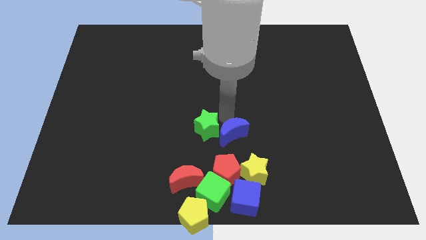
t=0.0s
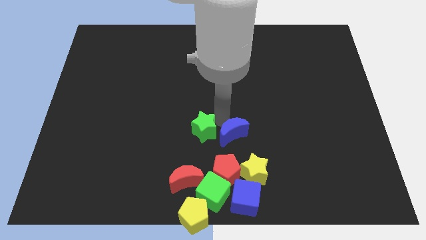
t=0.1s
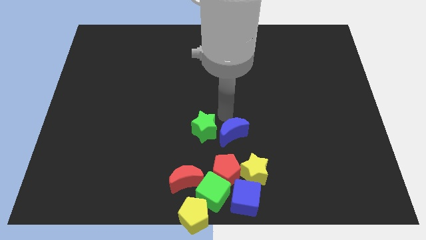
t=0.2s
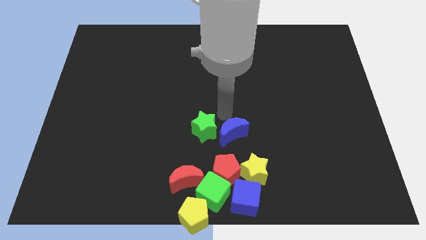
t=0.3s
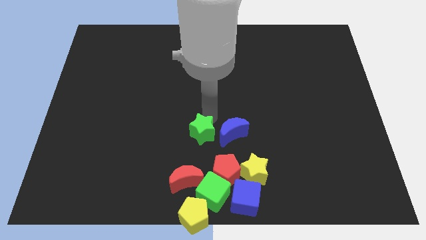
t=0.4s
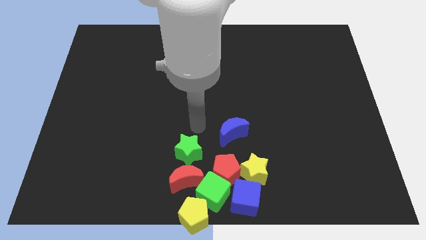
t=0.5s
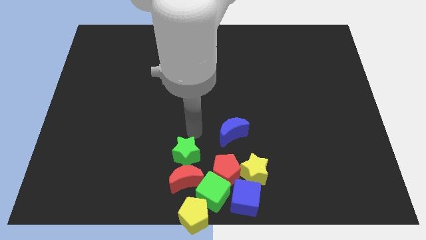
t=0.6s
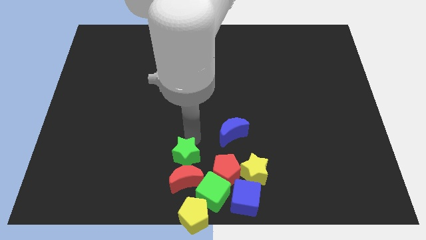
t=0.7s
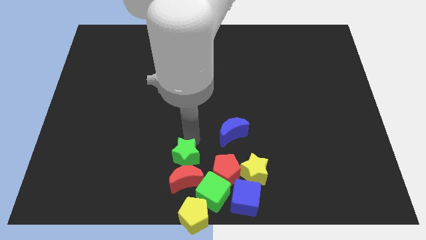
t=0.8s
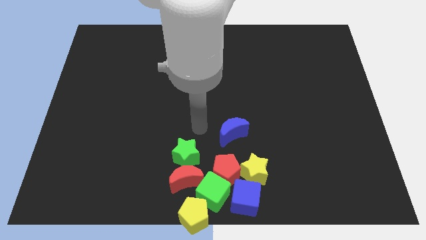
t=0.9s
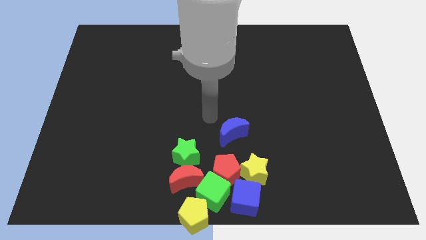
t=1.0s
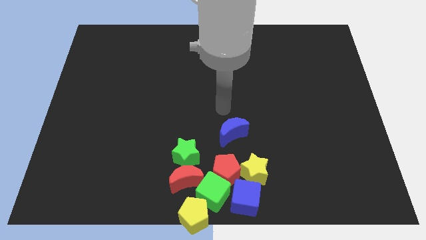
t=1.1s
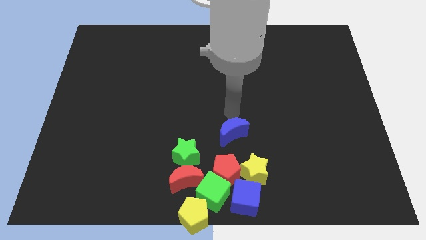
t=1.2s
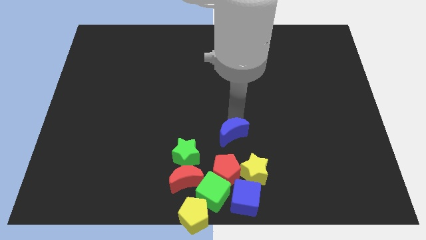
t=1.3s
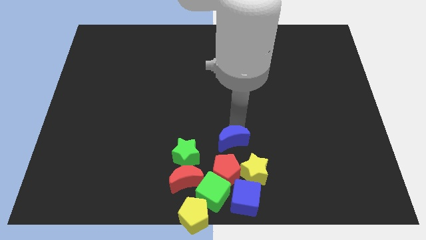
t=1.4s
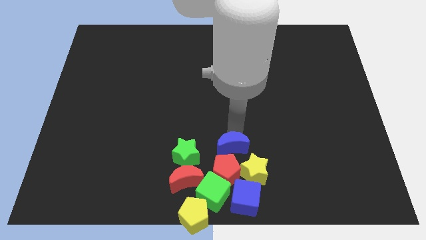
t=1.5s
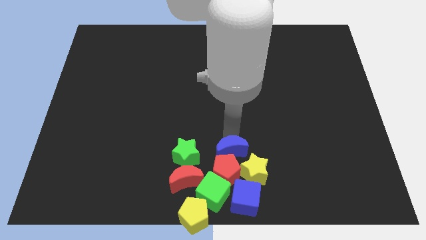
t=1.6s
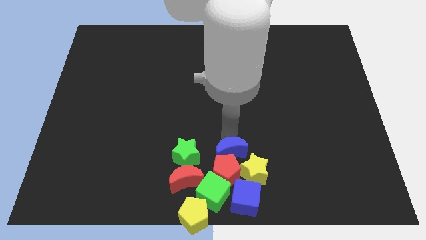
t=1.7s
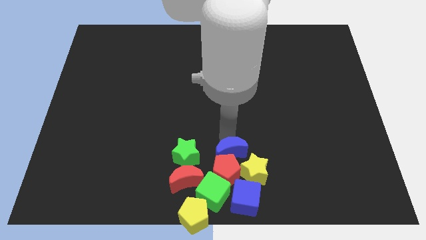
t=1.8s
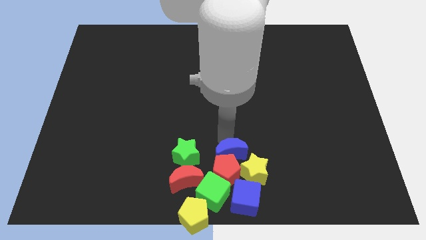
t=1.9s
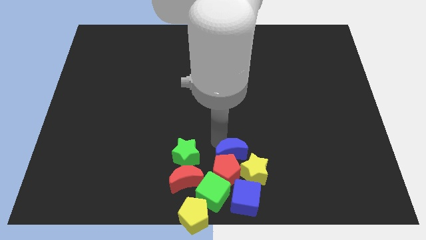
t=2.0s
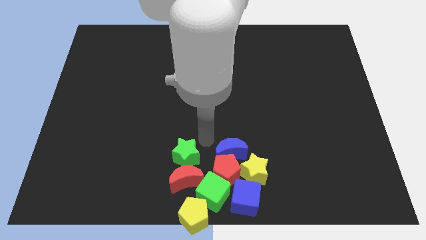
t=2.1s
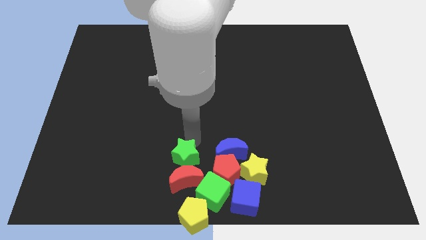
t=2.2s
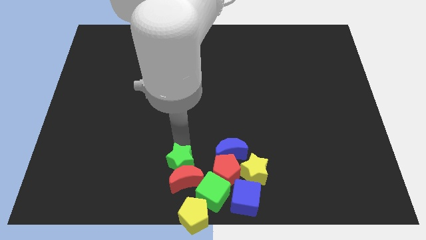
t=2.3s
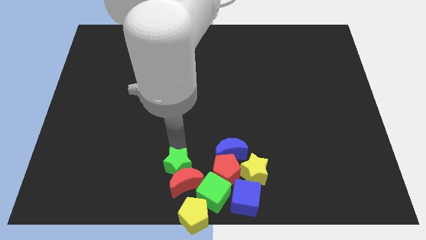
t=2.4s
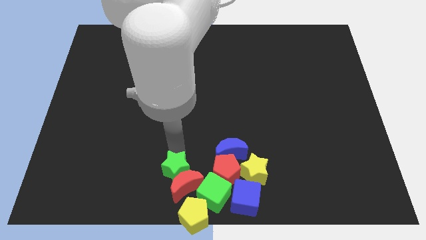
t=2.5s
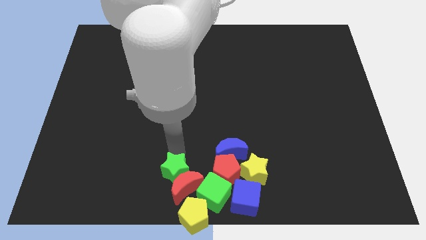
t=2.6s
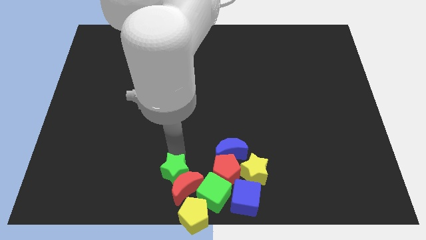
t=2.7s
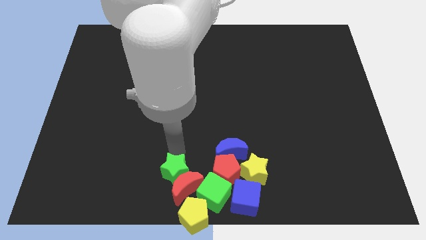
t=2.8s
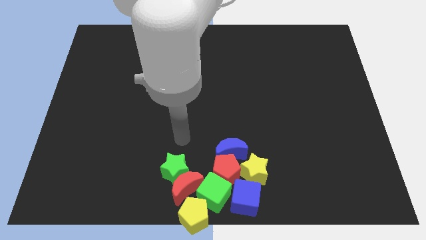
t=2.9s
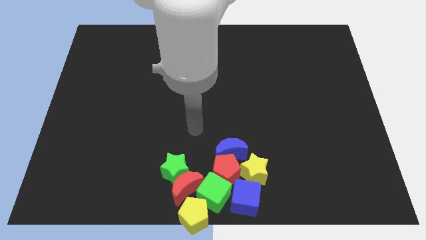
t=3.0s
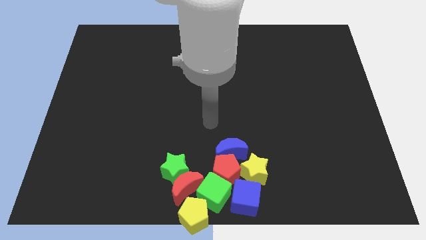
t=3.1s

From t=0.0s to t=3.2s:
push the green star and blue moon into the group of blocks

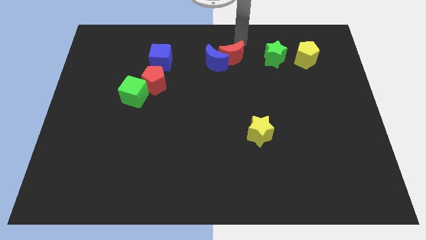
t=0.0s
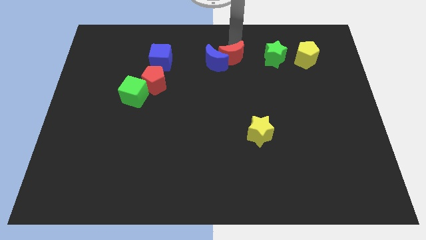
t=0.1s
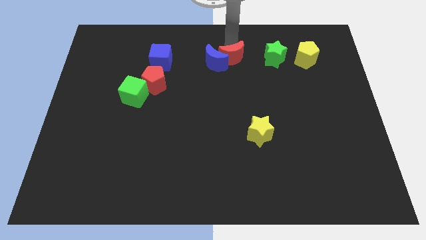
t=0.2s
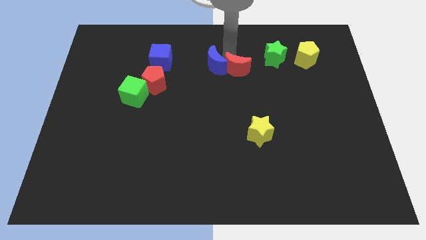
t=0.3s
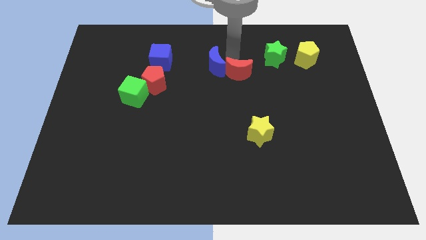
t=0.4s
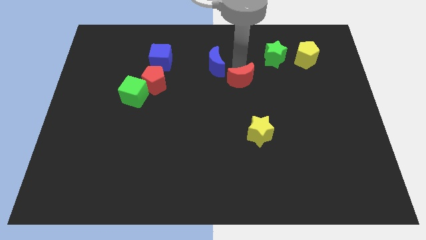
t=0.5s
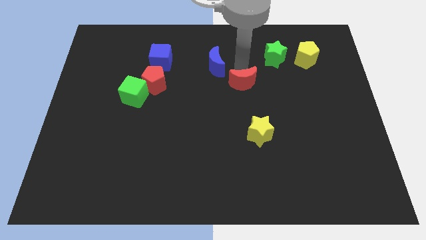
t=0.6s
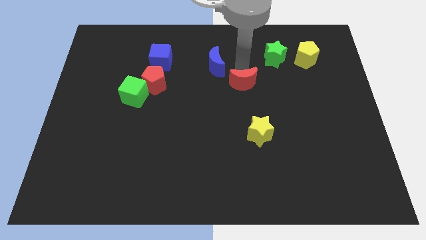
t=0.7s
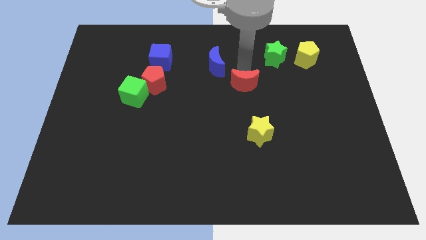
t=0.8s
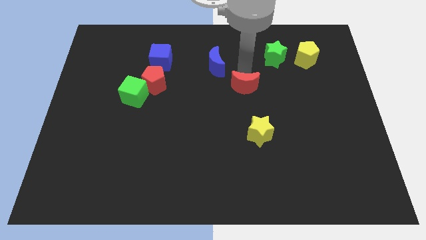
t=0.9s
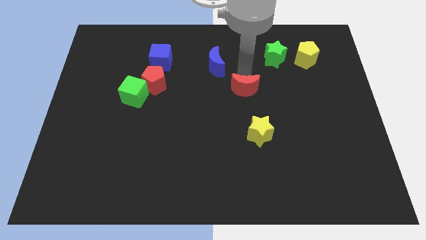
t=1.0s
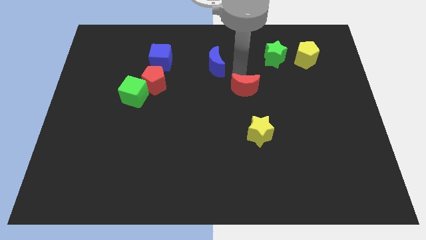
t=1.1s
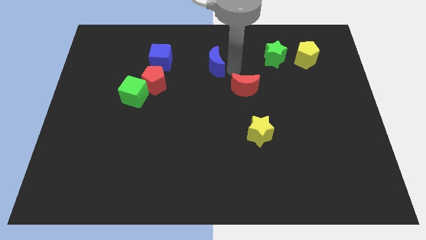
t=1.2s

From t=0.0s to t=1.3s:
place red crescent above yellow star

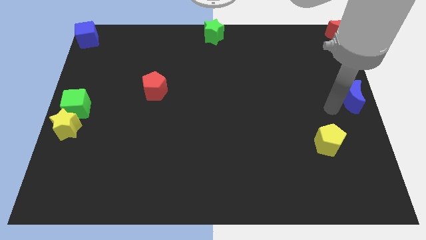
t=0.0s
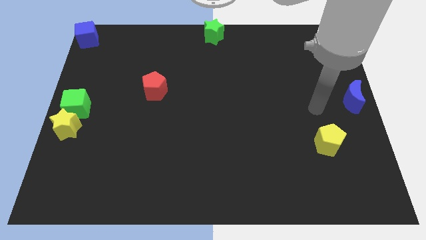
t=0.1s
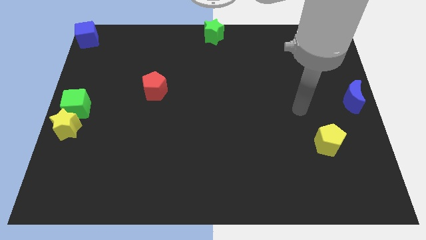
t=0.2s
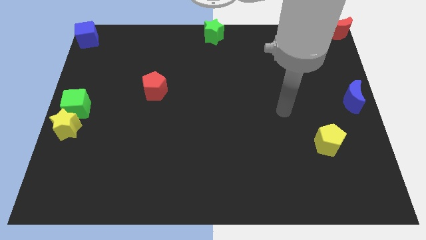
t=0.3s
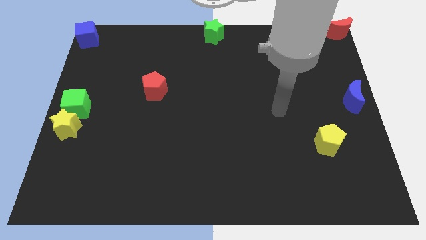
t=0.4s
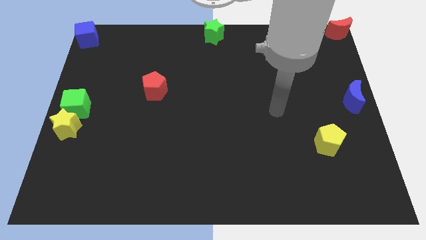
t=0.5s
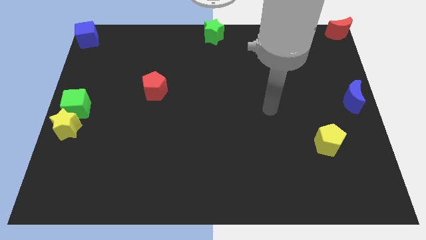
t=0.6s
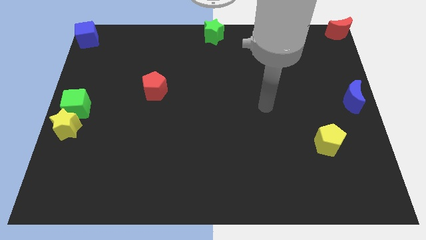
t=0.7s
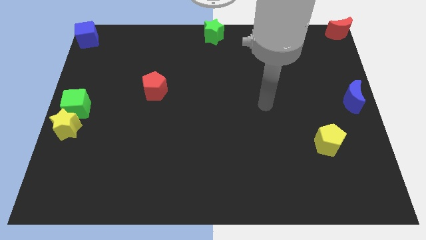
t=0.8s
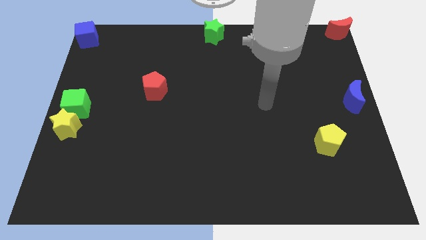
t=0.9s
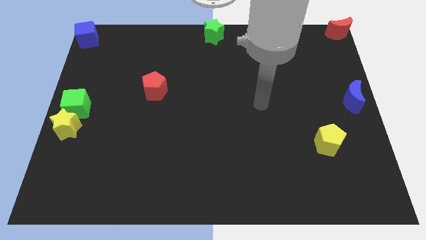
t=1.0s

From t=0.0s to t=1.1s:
move the arm away from the blue moon

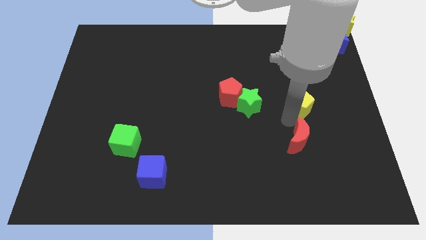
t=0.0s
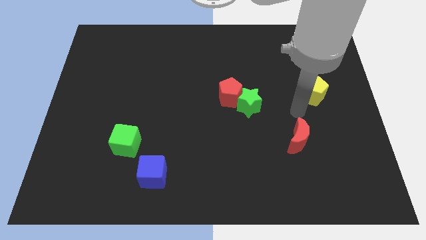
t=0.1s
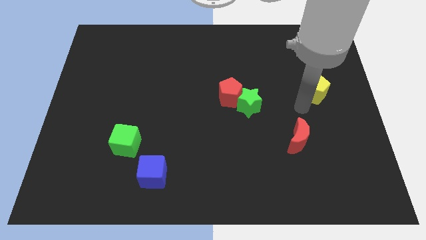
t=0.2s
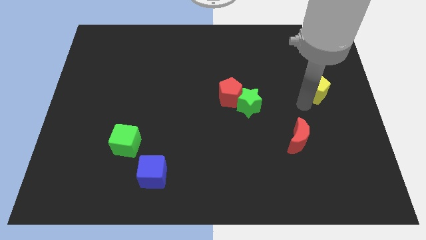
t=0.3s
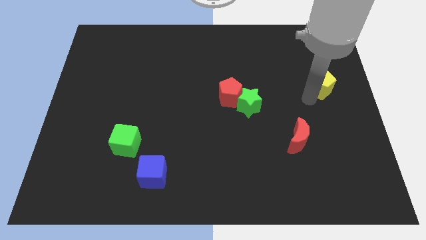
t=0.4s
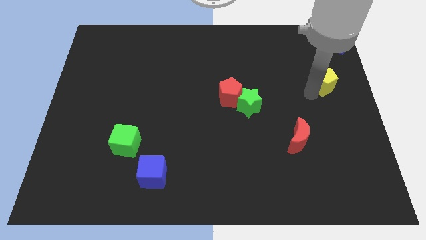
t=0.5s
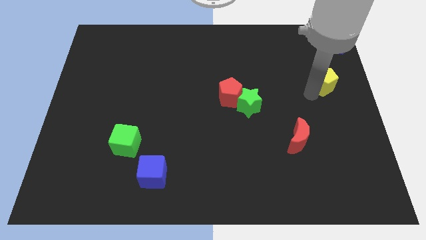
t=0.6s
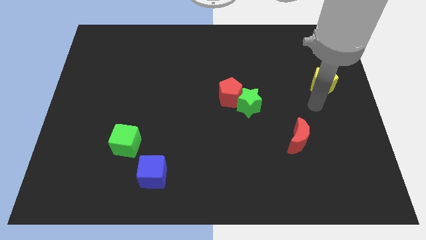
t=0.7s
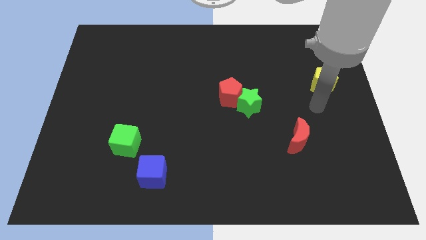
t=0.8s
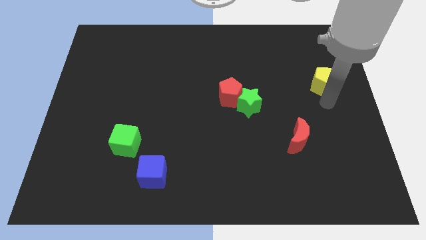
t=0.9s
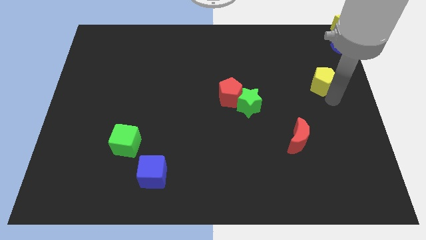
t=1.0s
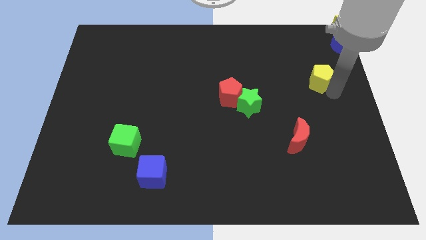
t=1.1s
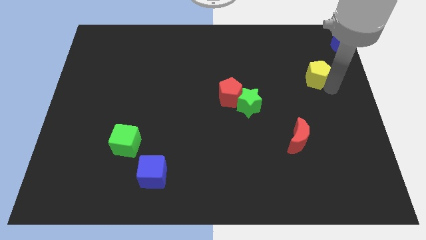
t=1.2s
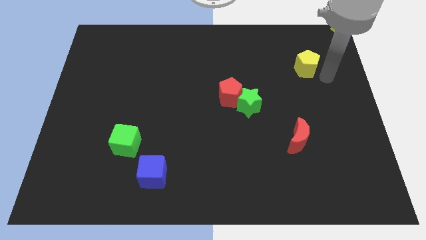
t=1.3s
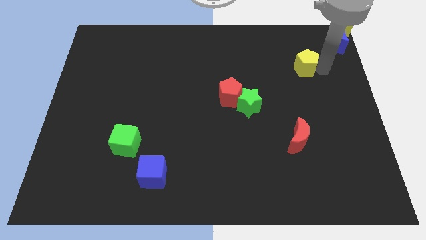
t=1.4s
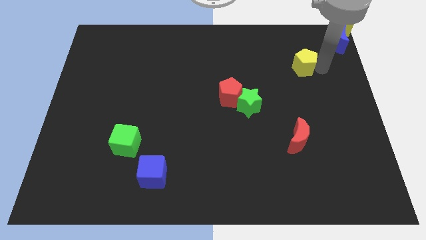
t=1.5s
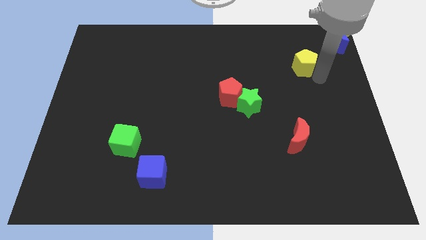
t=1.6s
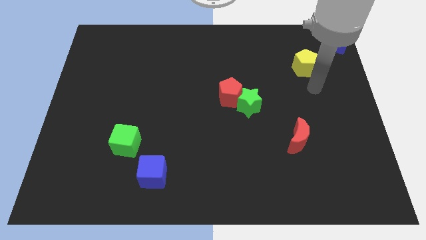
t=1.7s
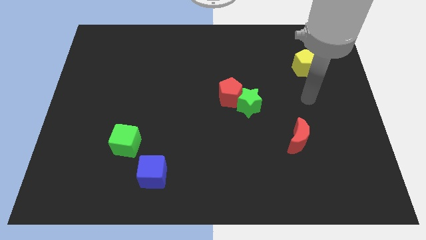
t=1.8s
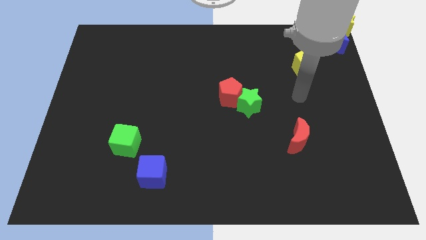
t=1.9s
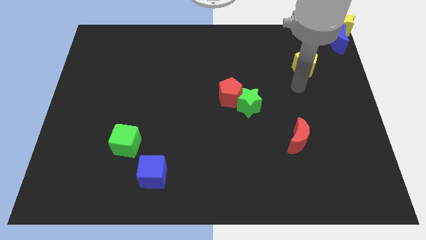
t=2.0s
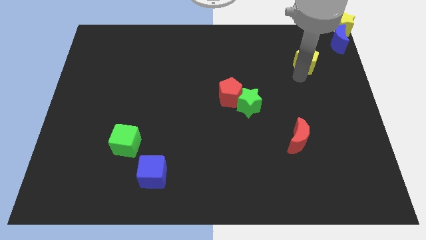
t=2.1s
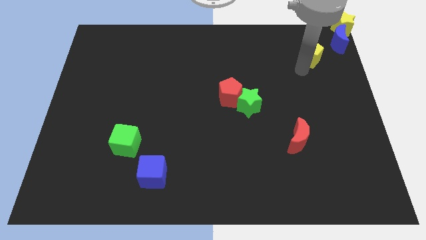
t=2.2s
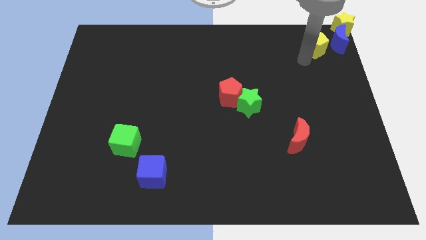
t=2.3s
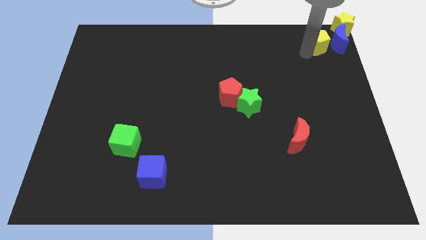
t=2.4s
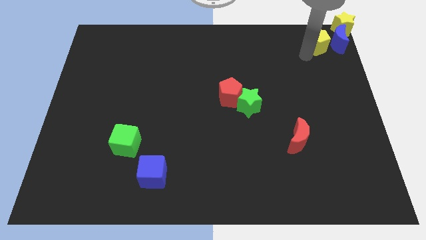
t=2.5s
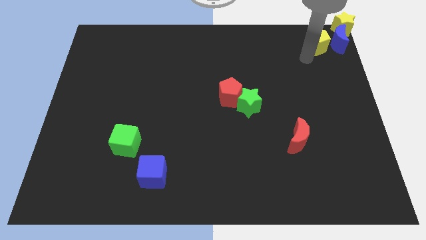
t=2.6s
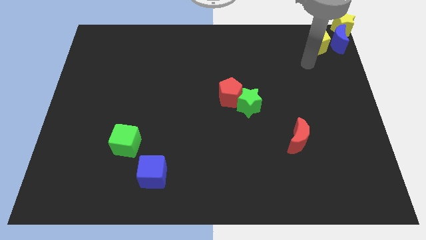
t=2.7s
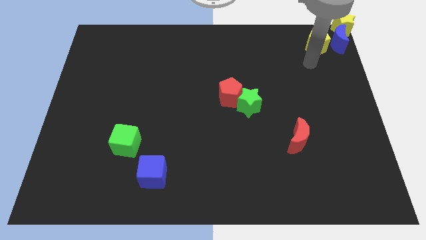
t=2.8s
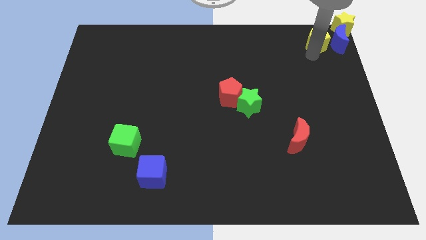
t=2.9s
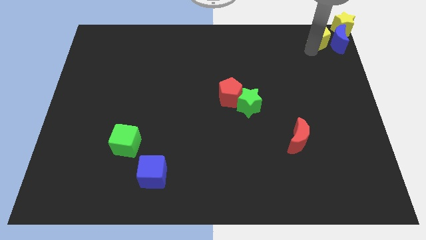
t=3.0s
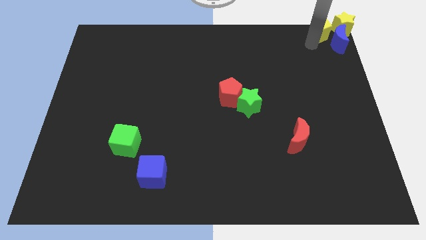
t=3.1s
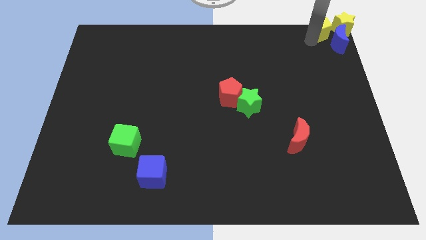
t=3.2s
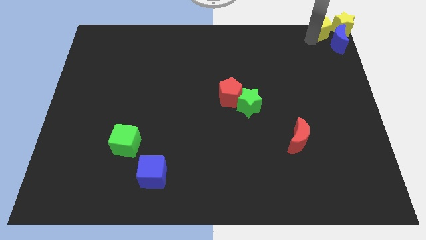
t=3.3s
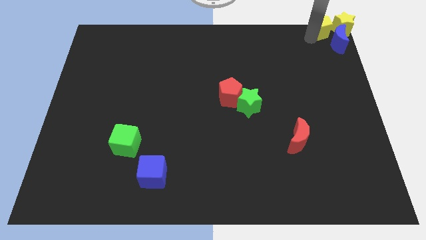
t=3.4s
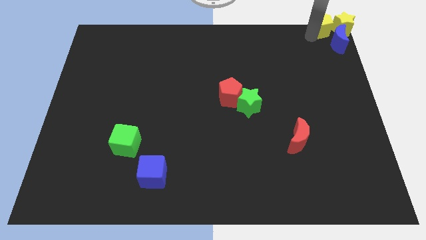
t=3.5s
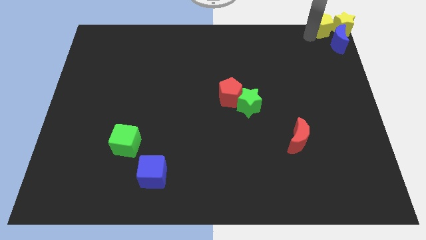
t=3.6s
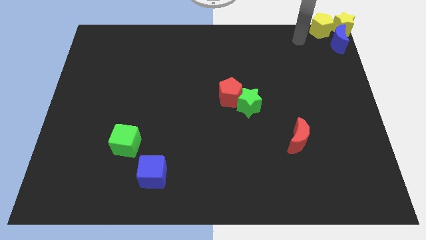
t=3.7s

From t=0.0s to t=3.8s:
move the yellow pentagon to the left of the yellow star
